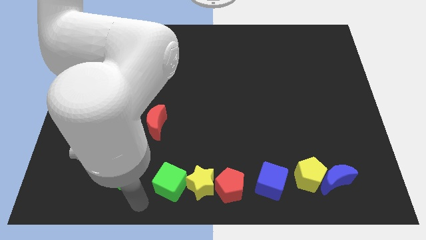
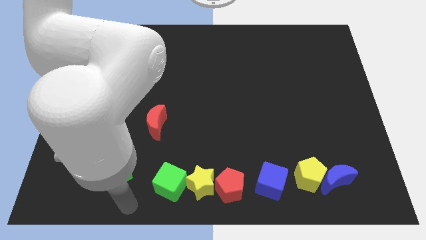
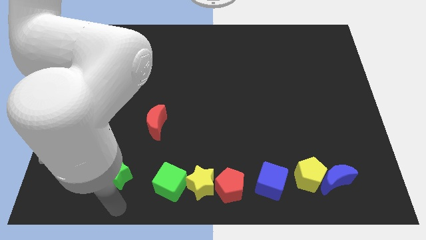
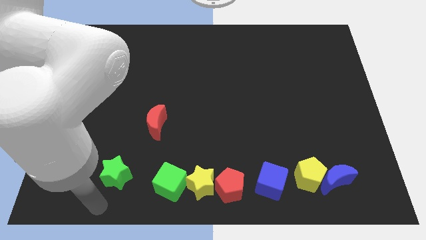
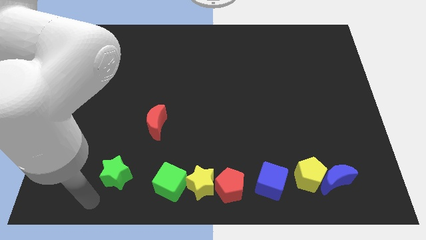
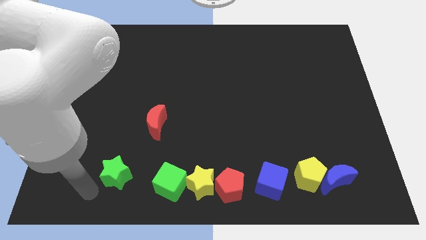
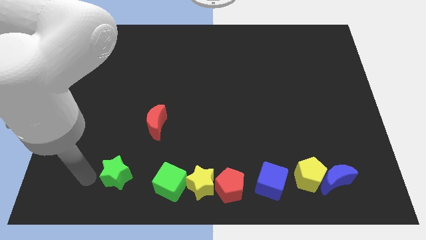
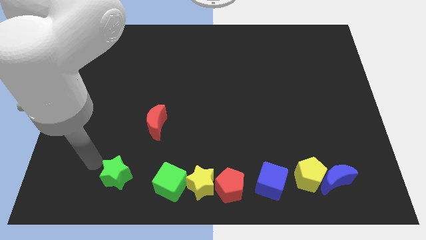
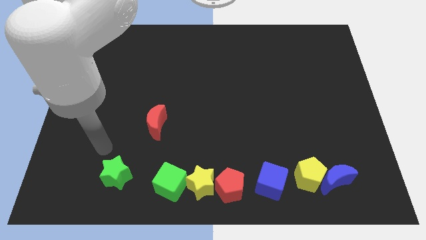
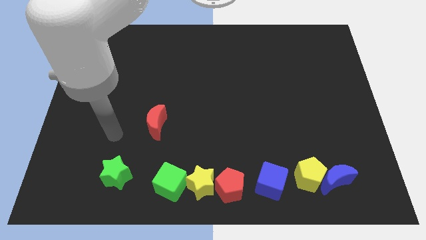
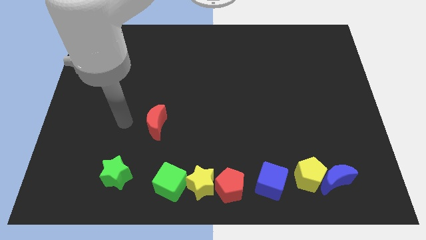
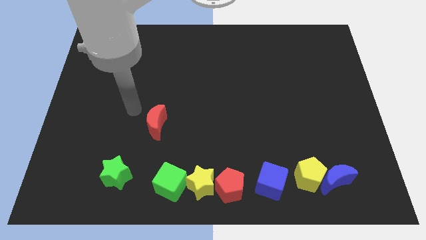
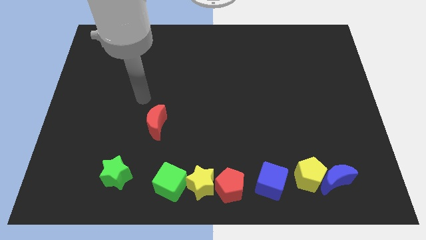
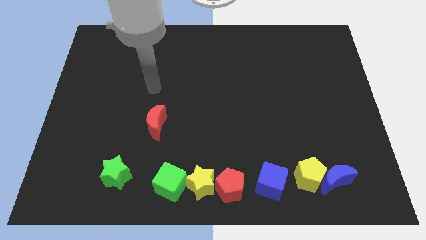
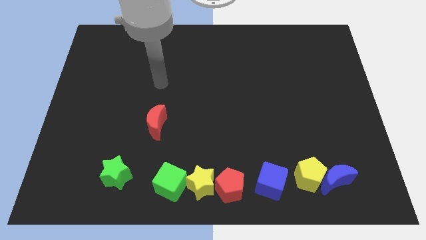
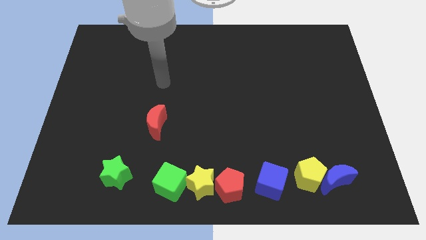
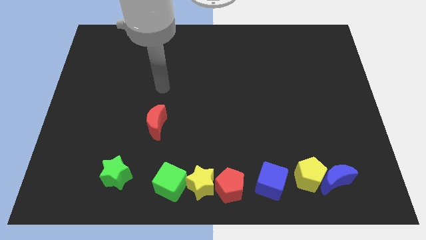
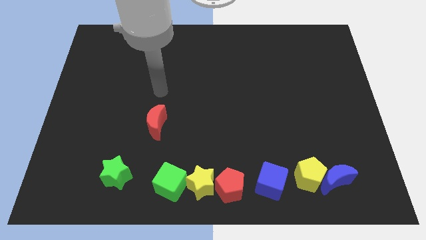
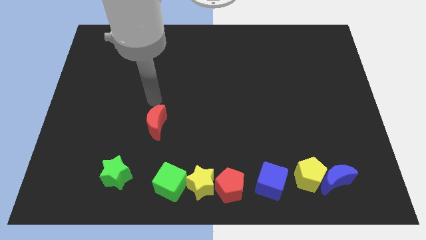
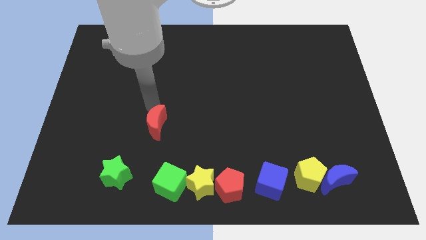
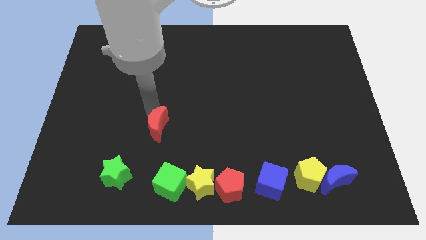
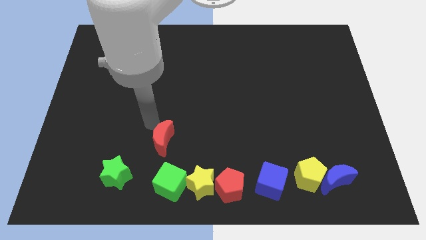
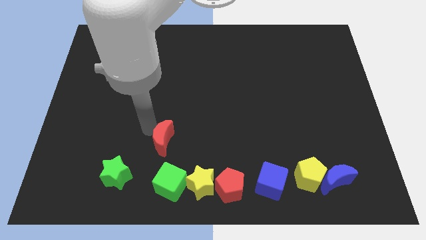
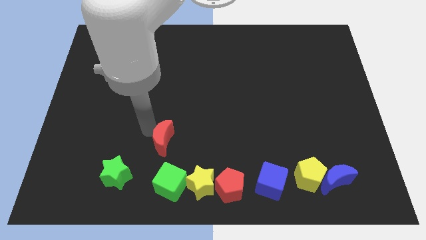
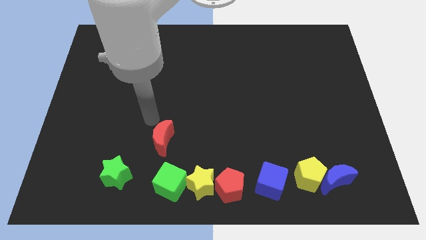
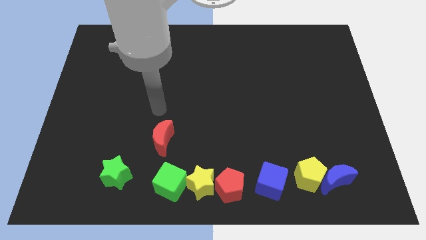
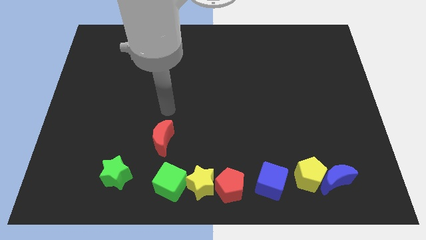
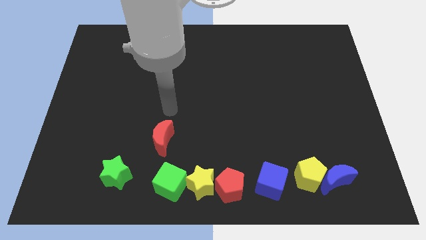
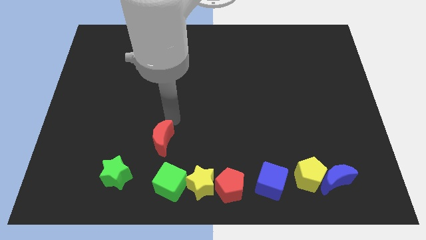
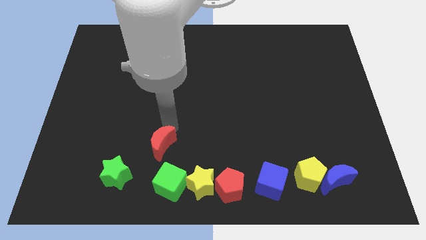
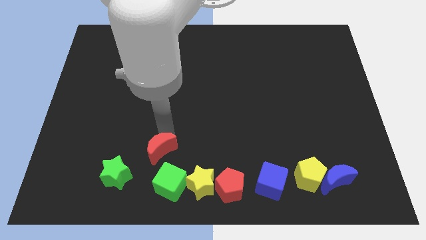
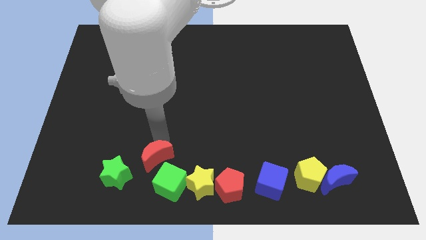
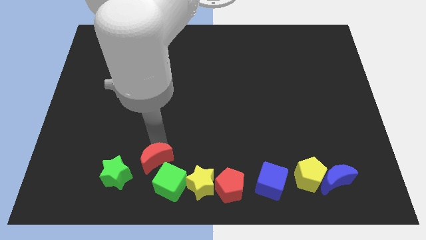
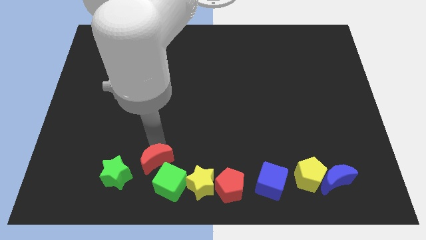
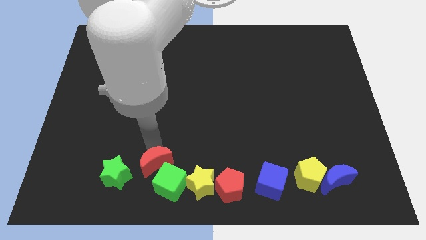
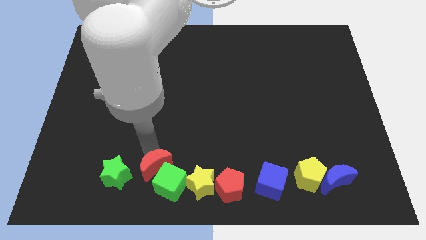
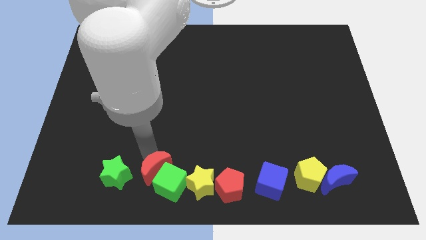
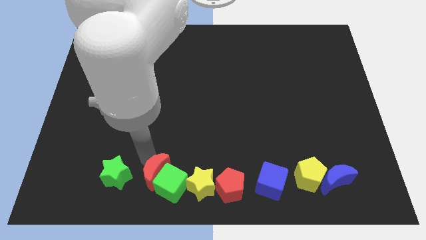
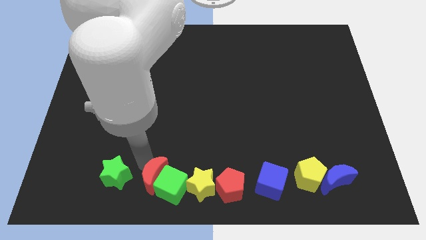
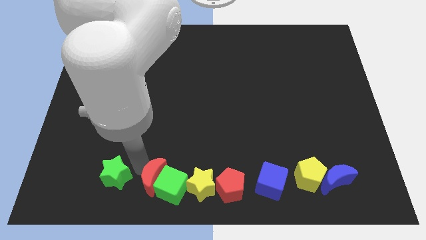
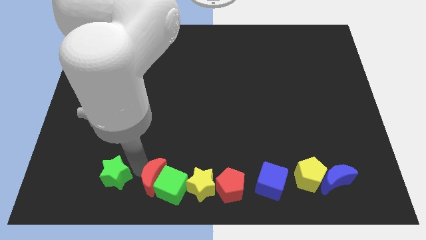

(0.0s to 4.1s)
place the red crescent left to the green cube

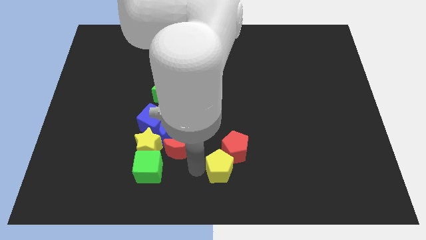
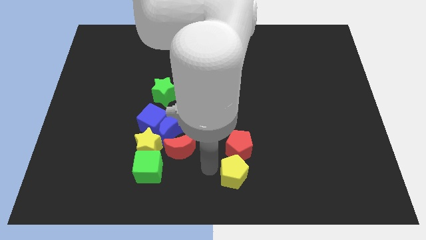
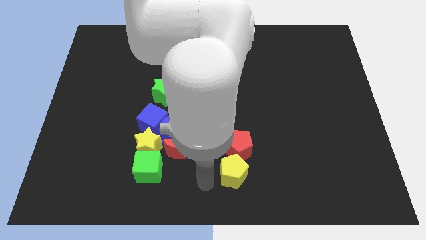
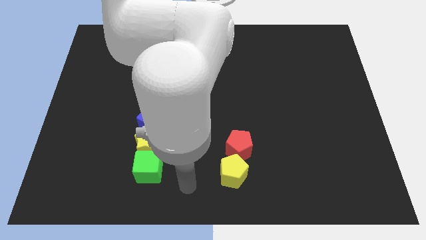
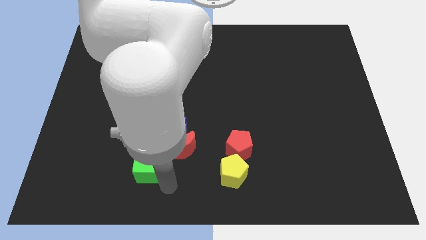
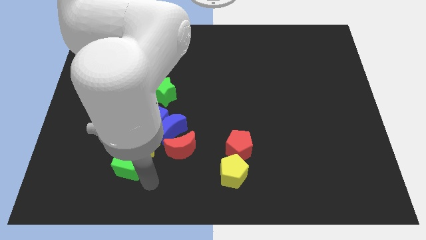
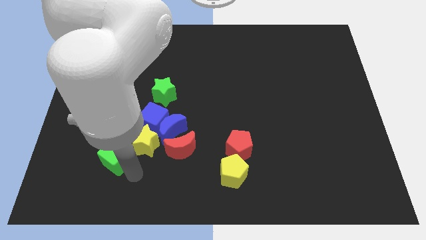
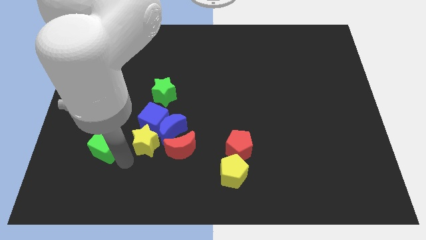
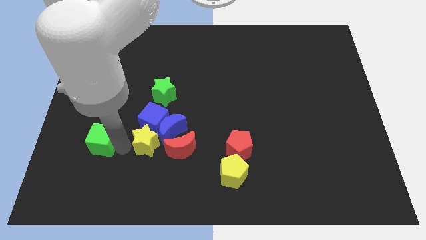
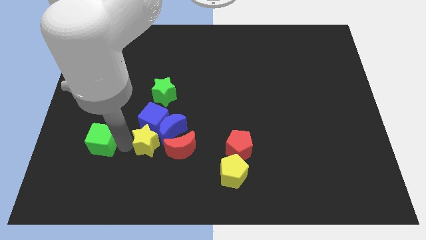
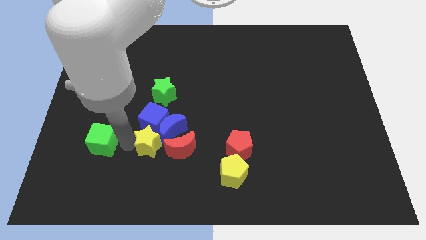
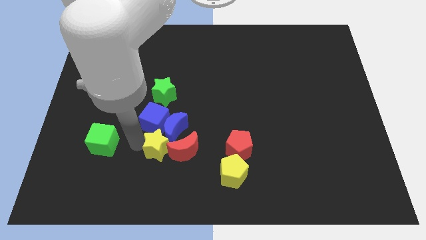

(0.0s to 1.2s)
place the green cube opposite to the yellow star

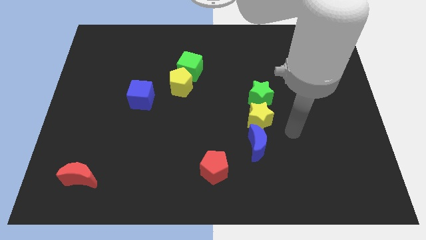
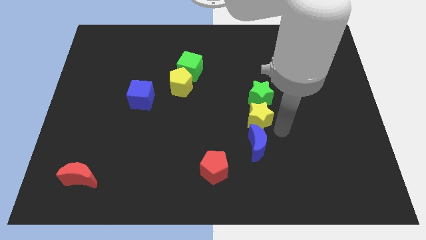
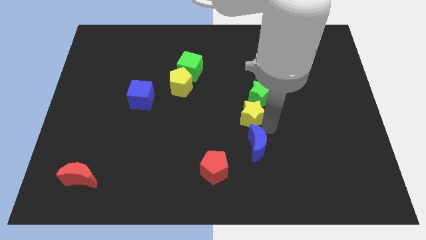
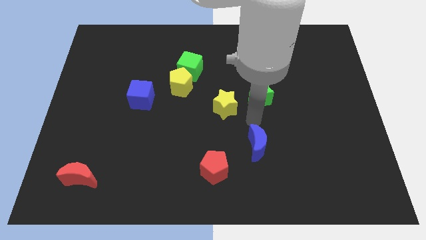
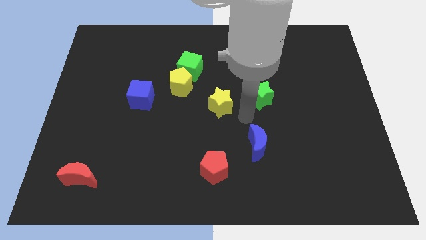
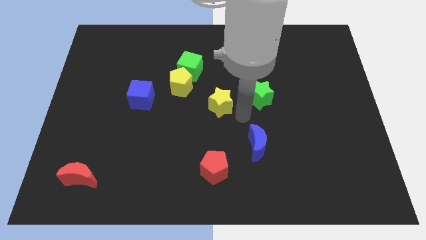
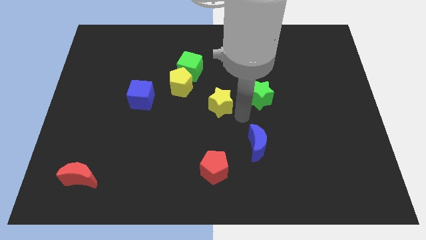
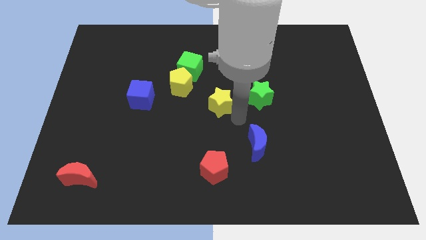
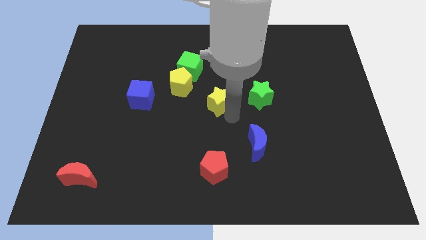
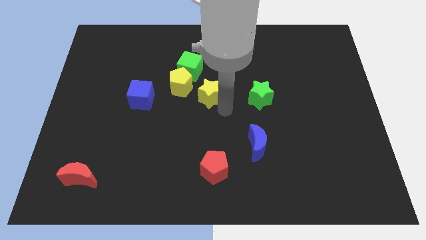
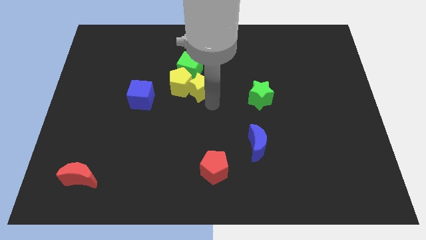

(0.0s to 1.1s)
move yellow star close to yellow pentagon

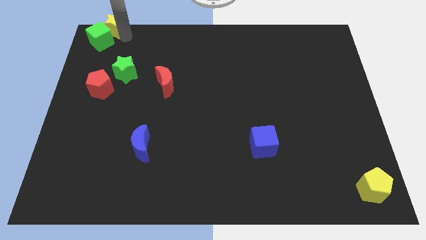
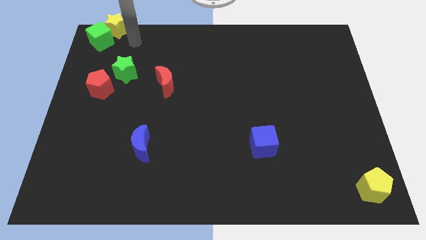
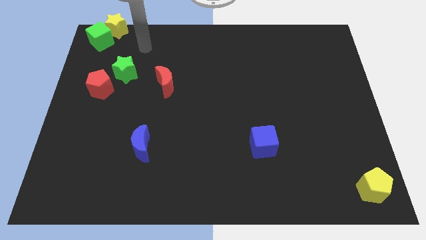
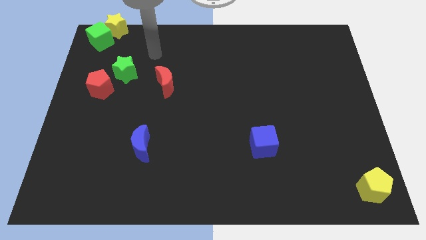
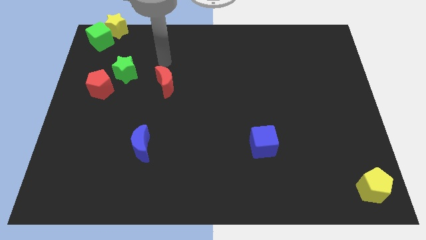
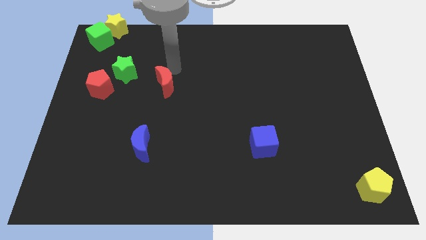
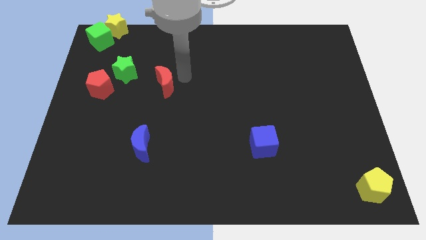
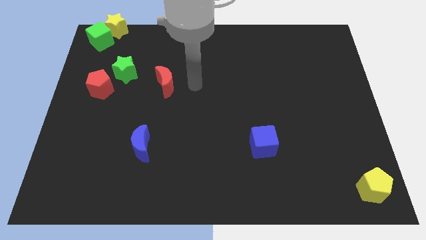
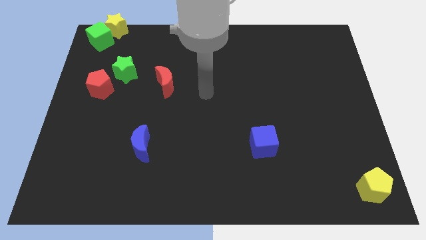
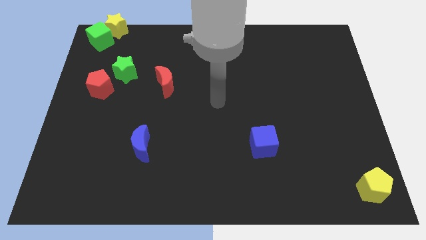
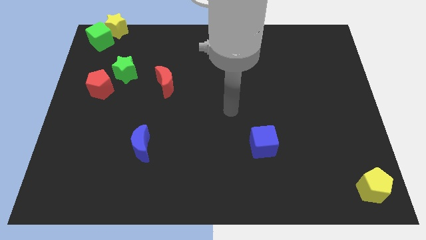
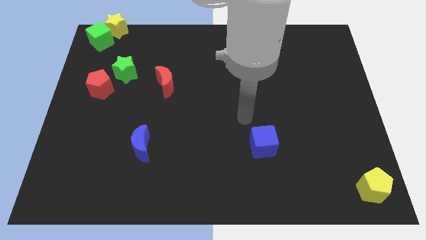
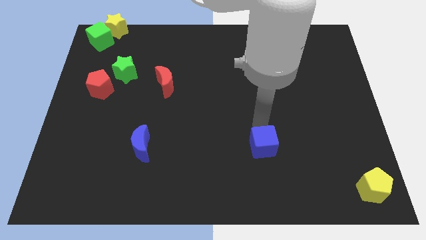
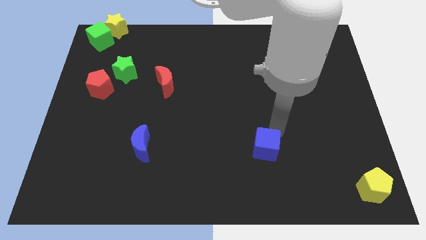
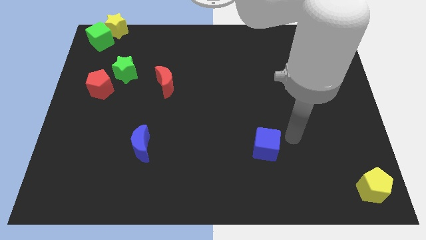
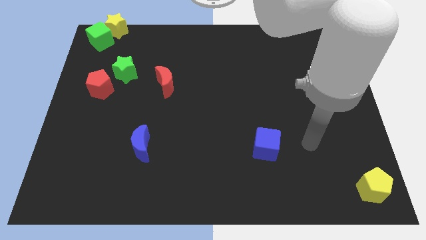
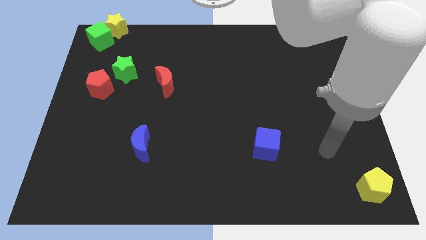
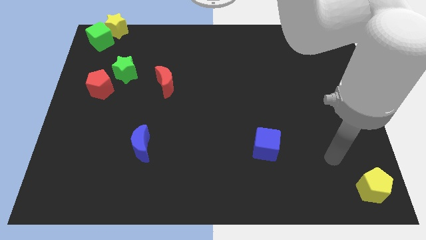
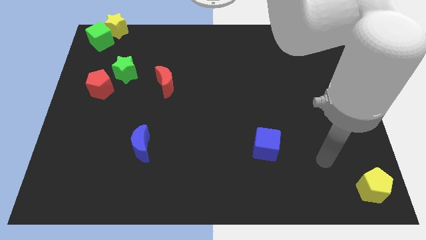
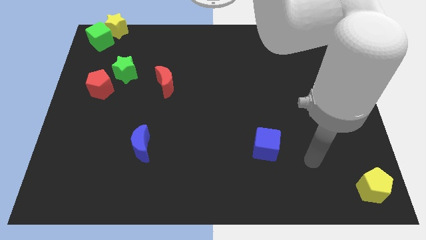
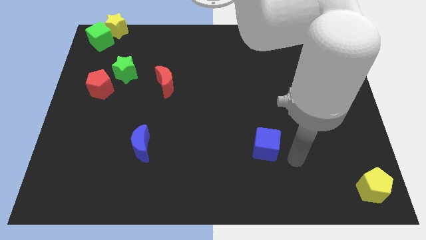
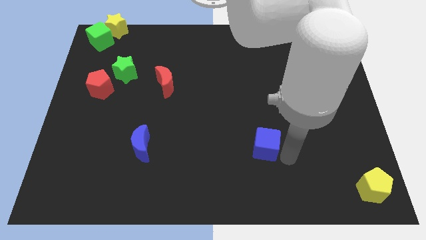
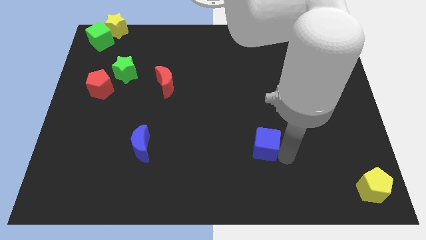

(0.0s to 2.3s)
move yourself away from the yellow star

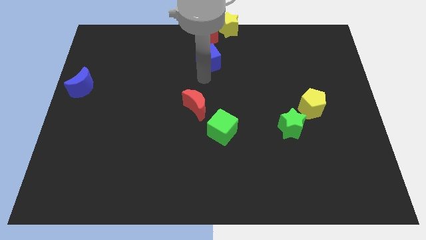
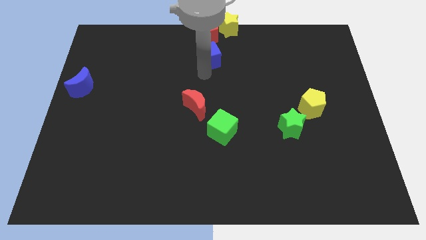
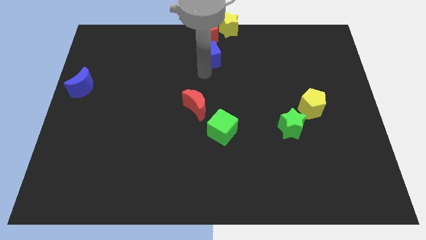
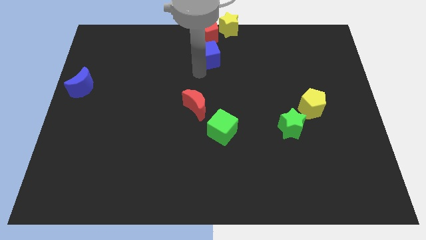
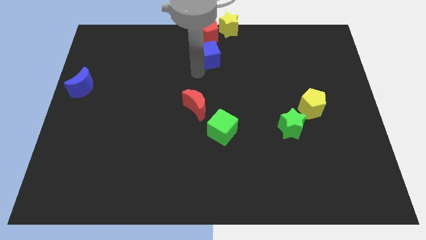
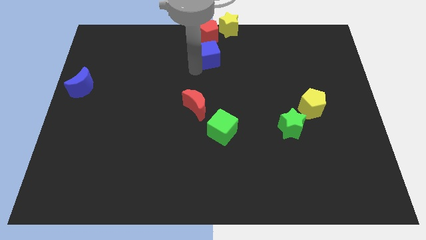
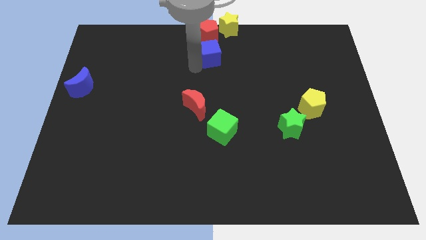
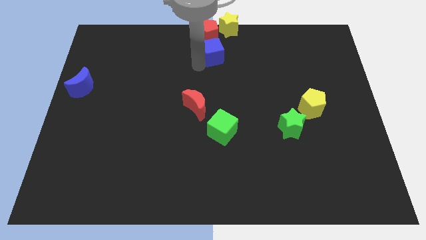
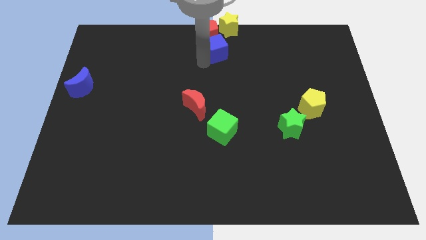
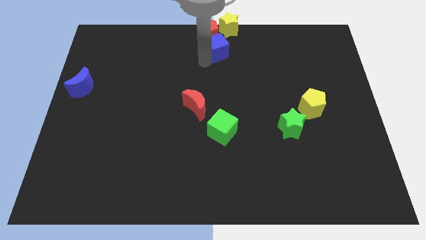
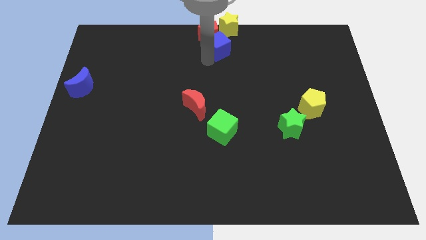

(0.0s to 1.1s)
push the blue cube towards the top center of the board
